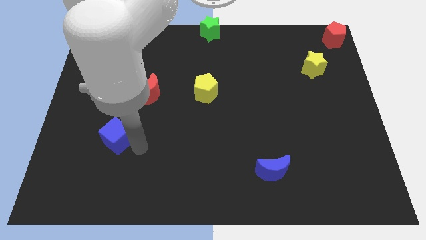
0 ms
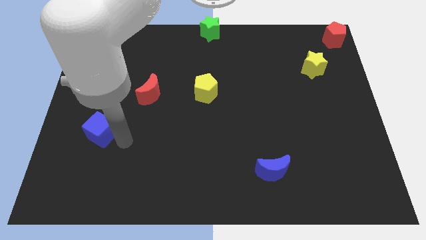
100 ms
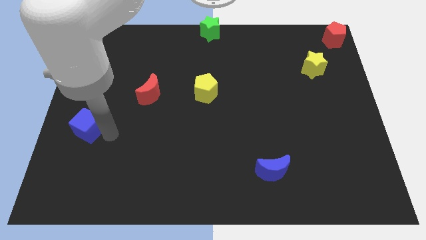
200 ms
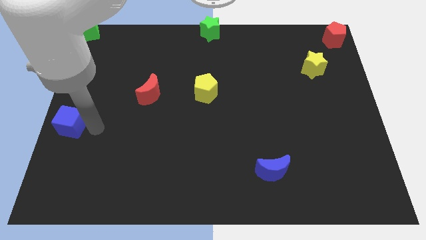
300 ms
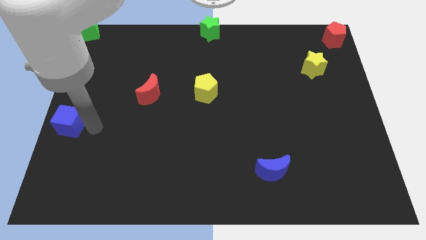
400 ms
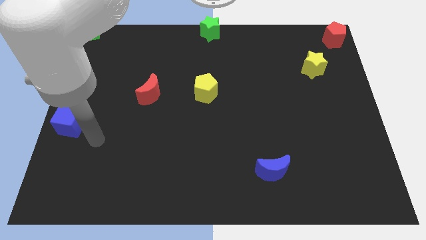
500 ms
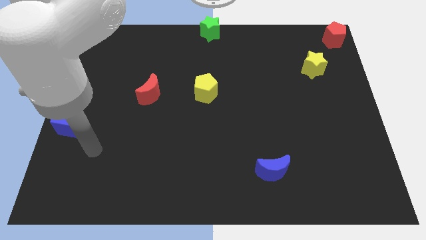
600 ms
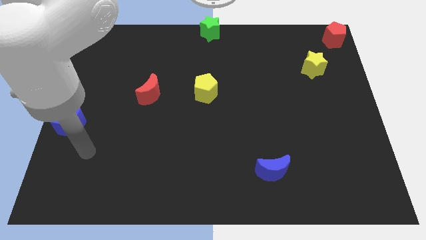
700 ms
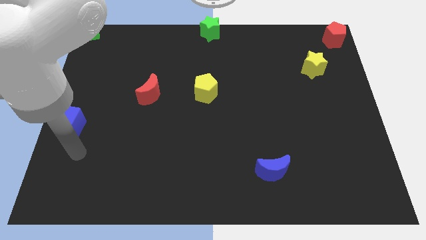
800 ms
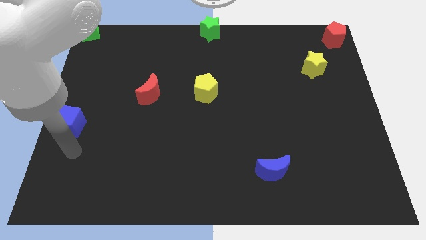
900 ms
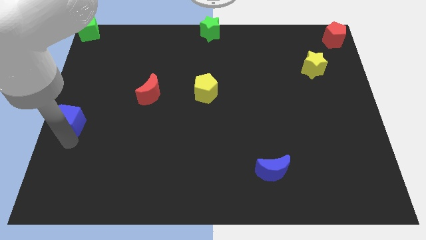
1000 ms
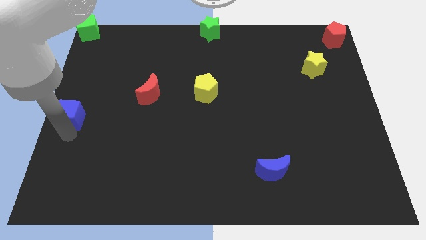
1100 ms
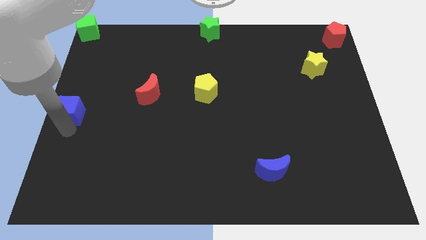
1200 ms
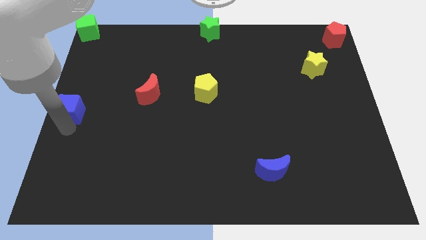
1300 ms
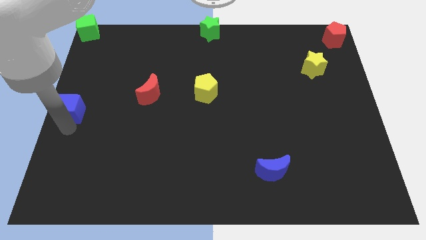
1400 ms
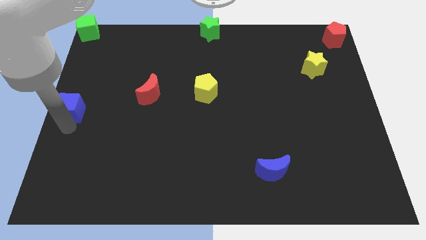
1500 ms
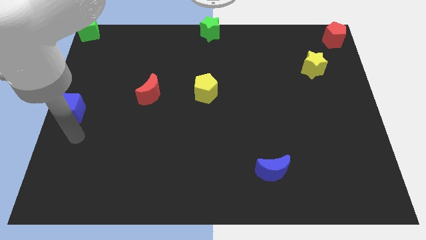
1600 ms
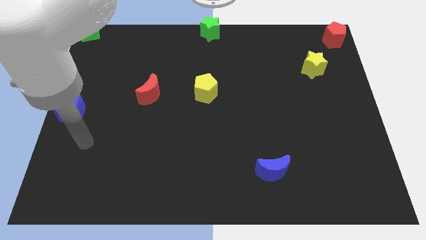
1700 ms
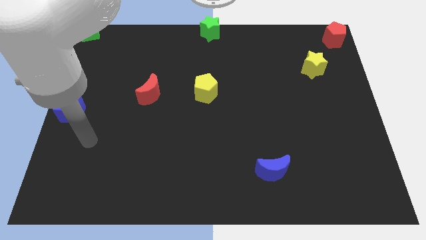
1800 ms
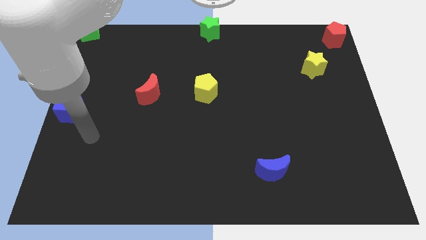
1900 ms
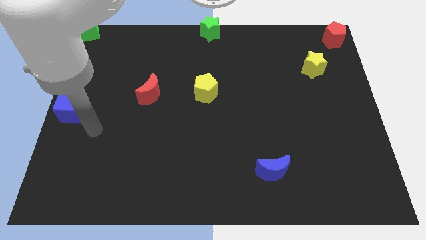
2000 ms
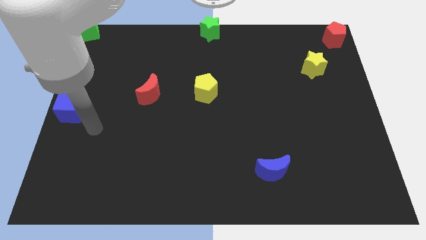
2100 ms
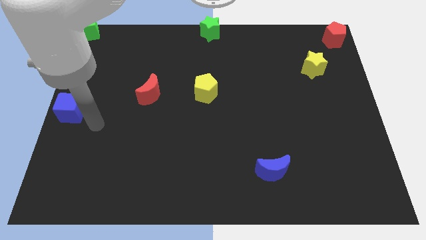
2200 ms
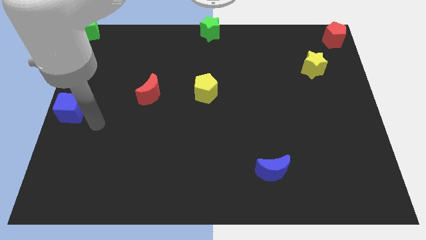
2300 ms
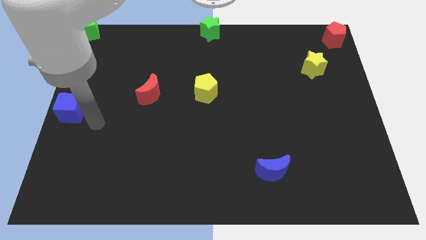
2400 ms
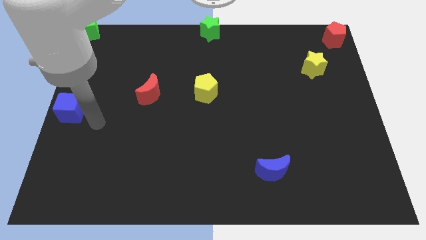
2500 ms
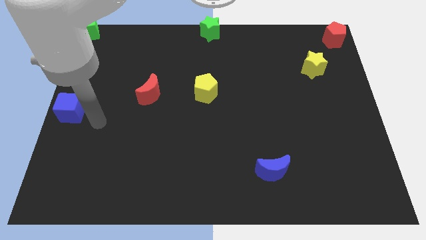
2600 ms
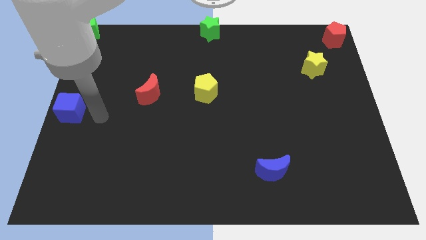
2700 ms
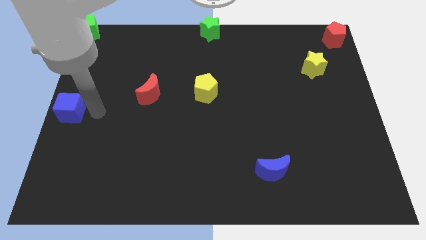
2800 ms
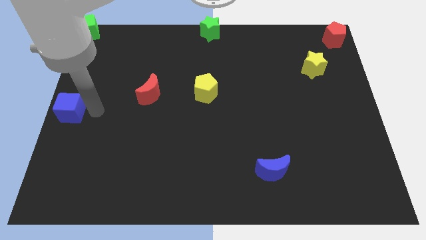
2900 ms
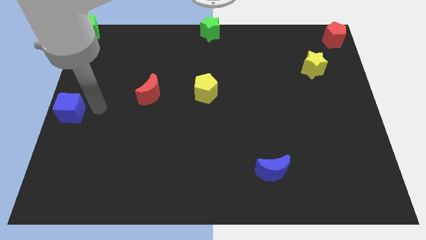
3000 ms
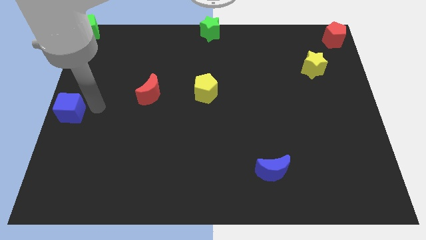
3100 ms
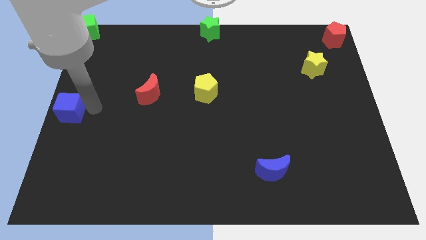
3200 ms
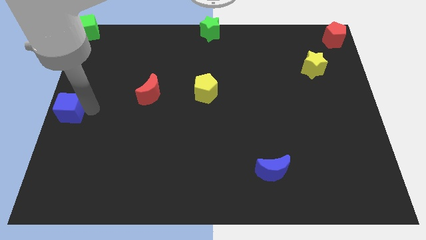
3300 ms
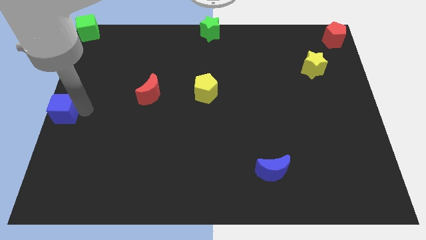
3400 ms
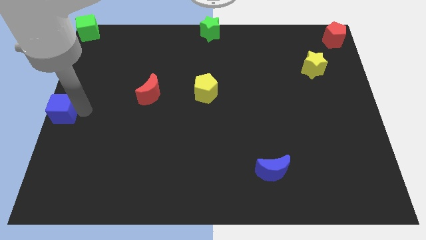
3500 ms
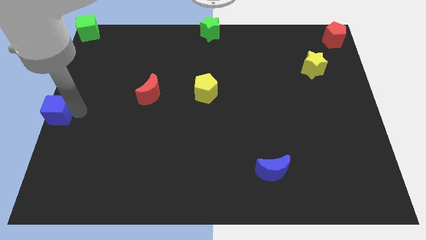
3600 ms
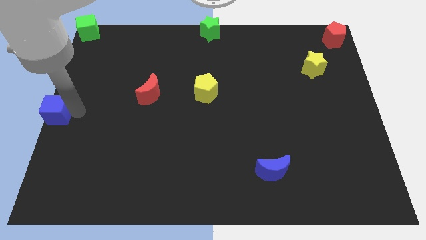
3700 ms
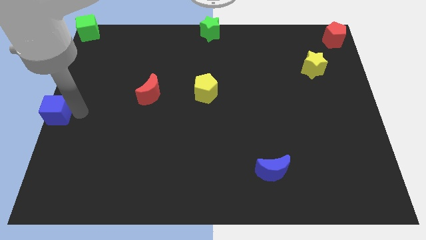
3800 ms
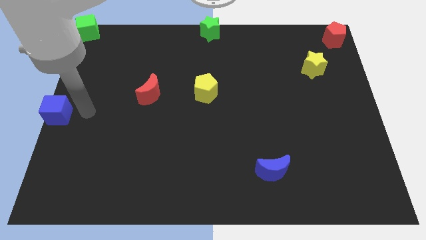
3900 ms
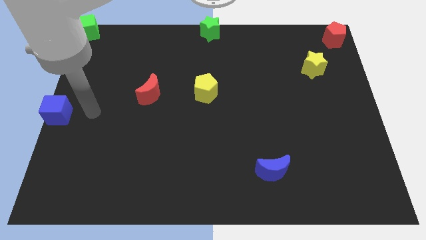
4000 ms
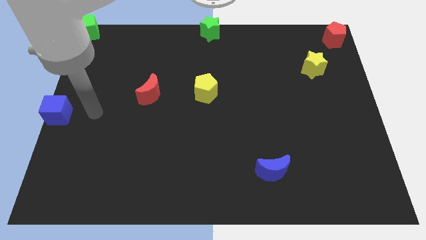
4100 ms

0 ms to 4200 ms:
place the blue cube at the center left of the board

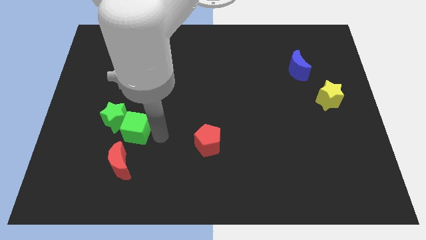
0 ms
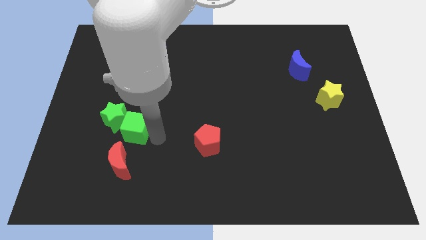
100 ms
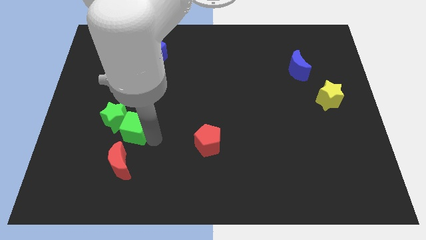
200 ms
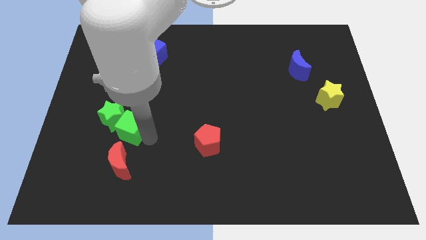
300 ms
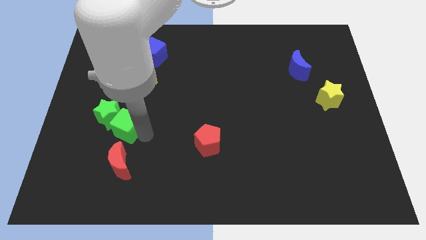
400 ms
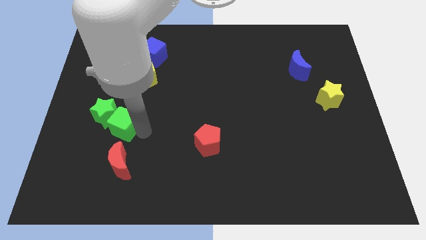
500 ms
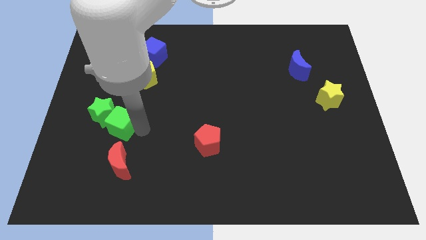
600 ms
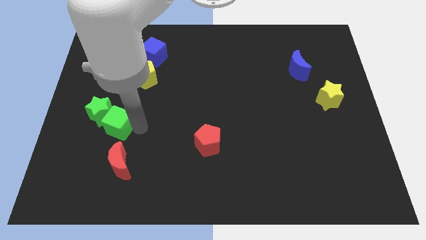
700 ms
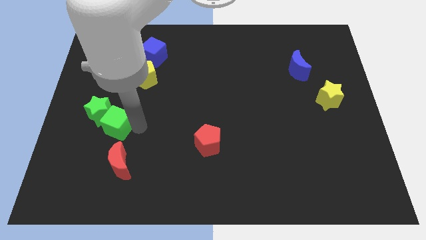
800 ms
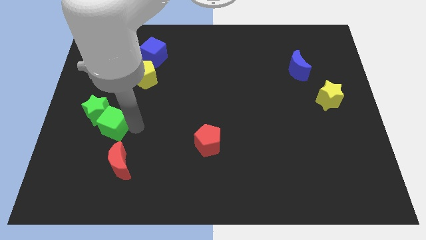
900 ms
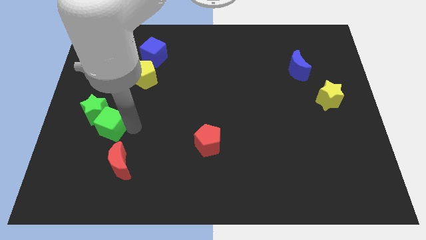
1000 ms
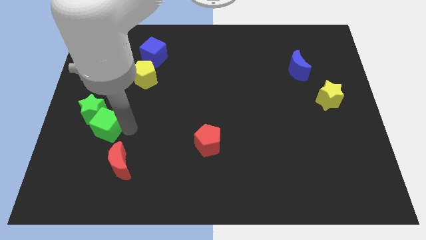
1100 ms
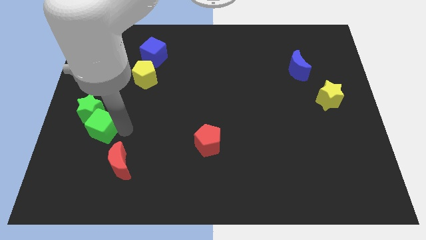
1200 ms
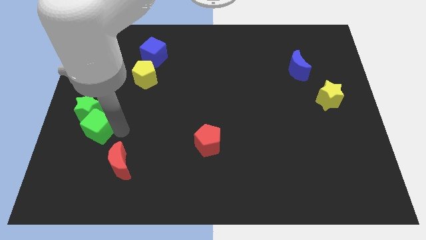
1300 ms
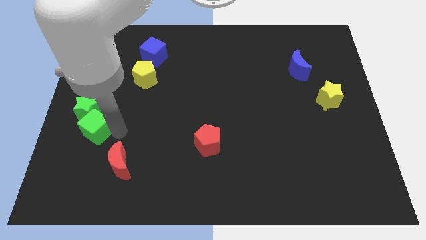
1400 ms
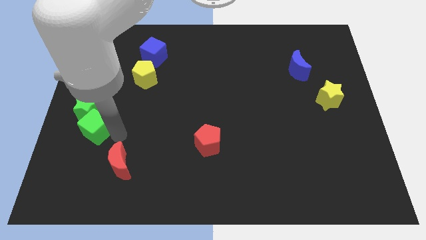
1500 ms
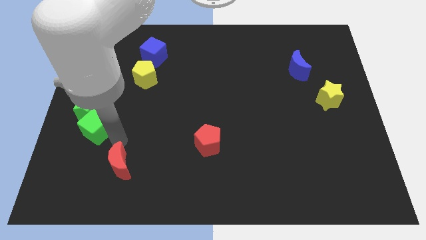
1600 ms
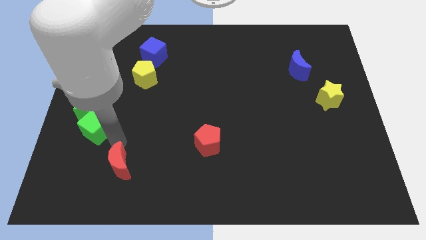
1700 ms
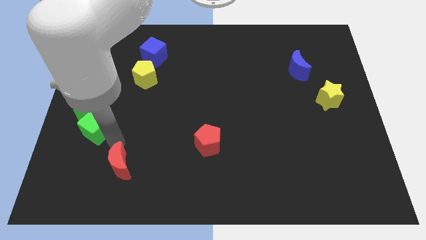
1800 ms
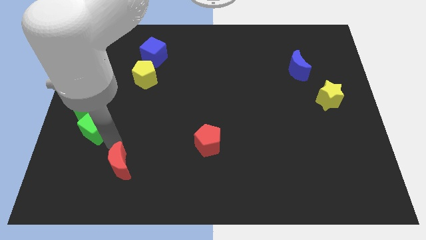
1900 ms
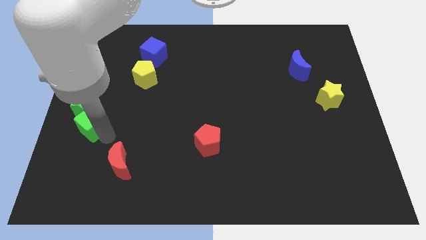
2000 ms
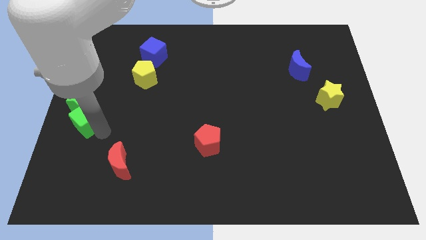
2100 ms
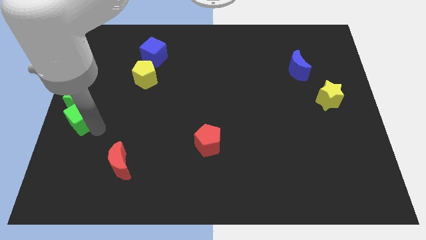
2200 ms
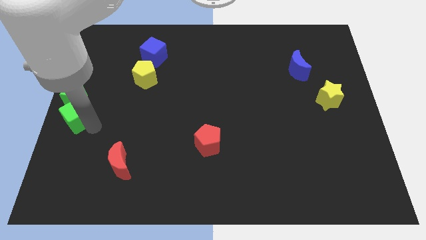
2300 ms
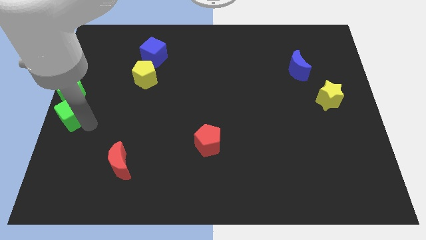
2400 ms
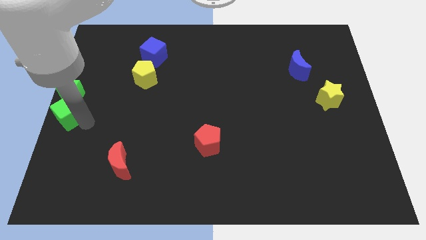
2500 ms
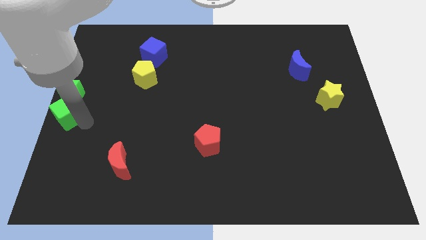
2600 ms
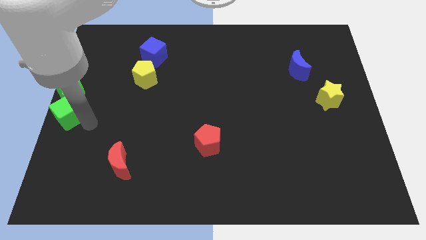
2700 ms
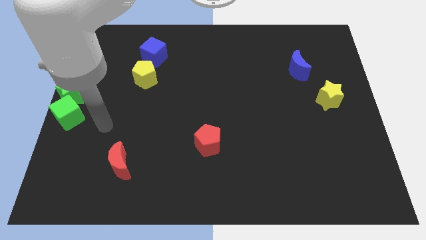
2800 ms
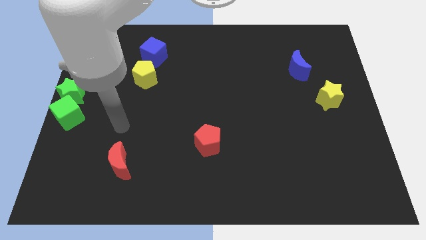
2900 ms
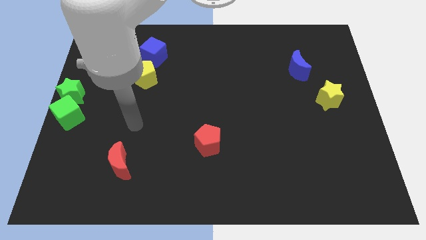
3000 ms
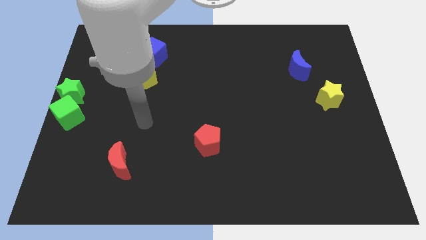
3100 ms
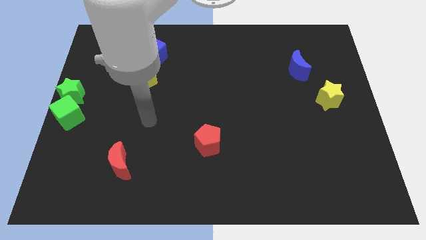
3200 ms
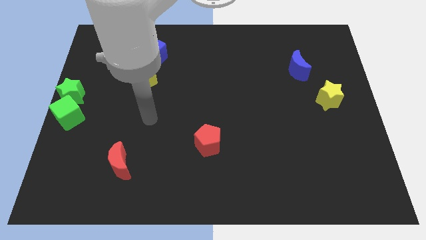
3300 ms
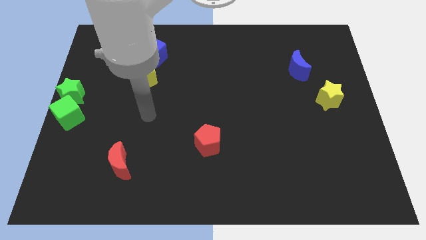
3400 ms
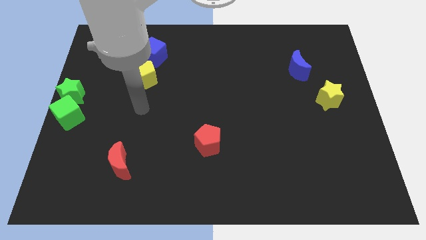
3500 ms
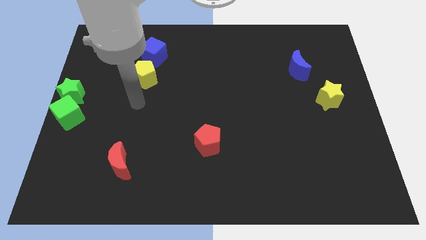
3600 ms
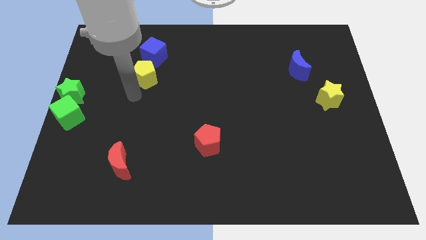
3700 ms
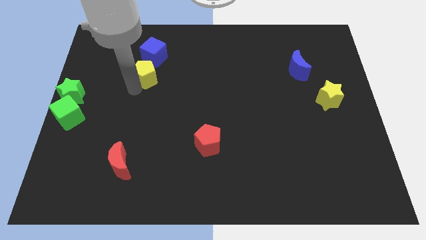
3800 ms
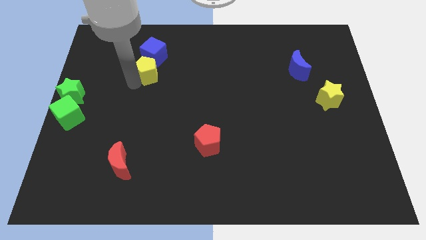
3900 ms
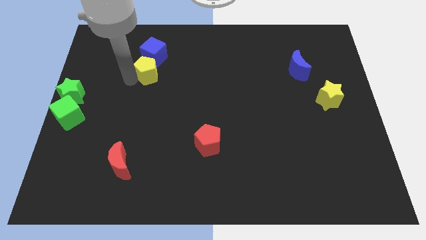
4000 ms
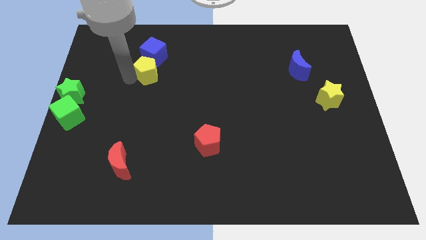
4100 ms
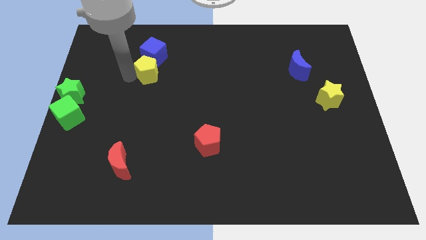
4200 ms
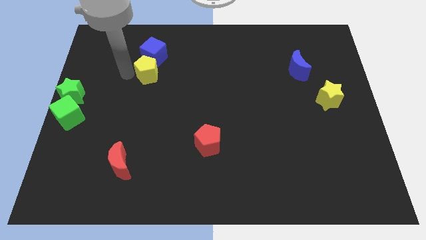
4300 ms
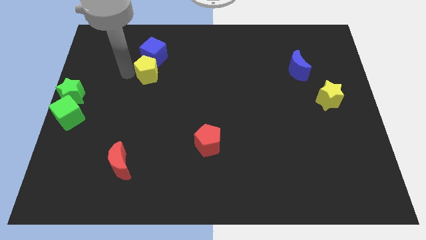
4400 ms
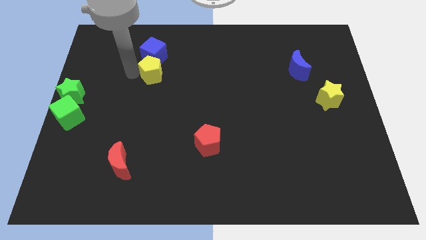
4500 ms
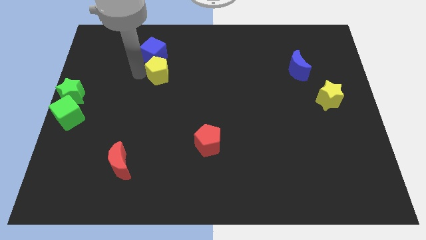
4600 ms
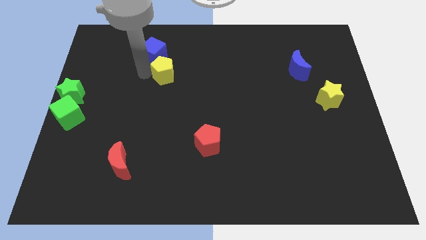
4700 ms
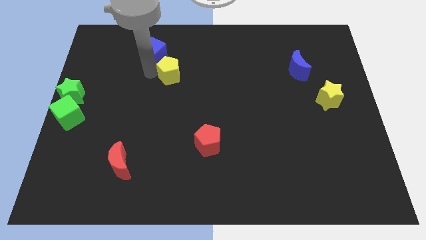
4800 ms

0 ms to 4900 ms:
move both the green blocks and yellow pentagon diagonal to each other
